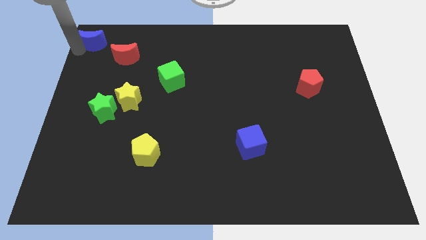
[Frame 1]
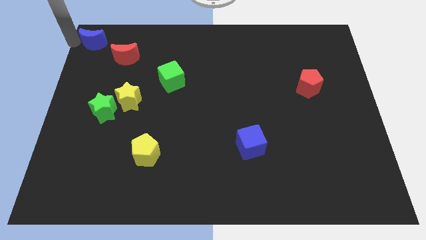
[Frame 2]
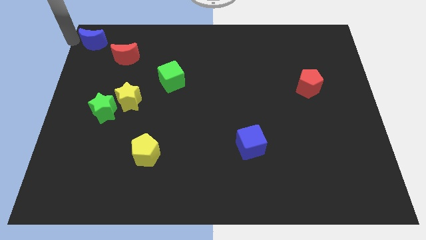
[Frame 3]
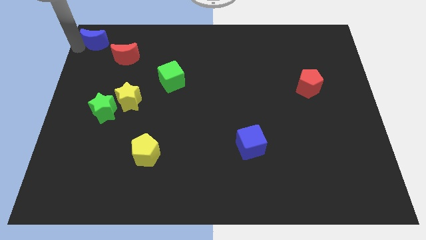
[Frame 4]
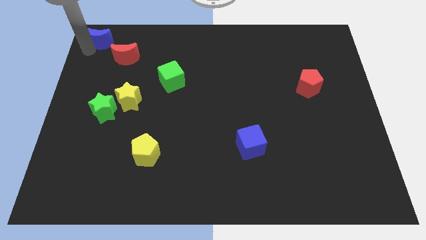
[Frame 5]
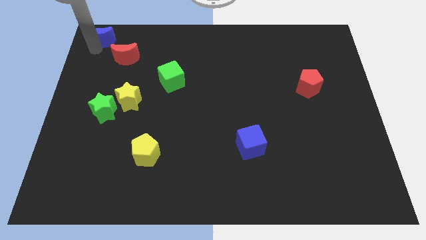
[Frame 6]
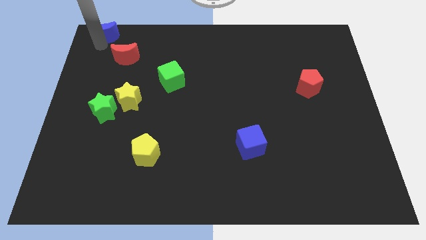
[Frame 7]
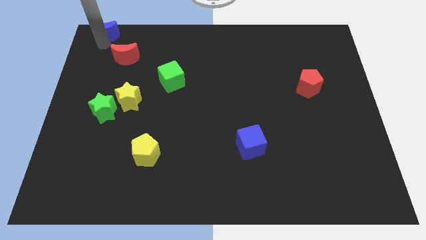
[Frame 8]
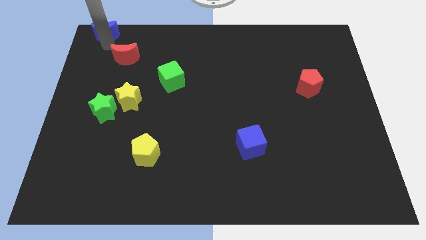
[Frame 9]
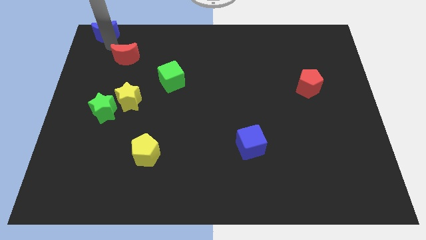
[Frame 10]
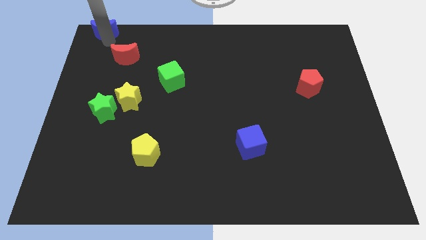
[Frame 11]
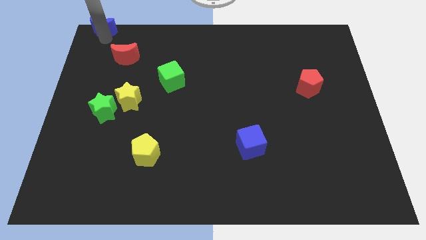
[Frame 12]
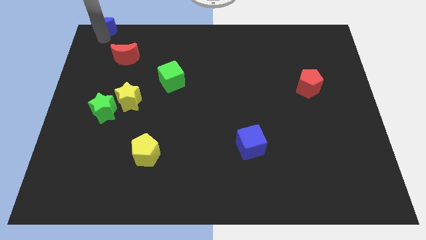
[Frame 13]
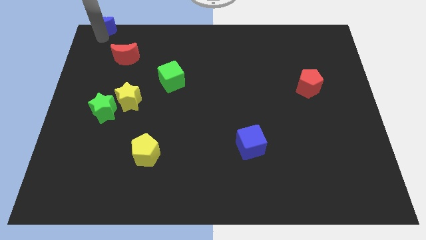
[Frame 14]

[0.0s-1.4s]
place blue moon to the top left of the red moon

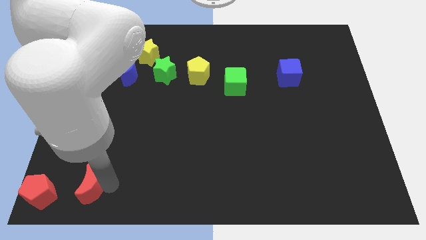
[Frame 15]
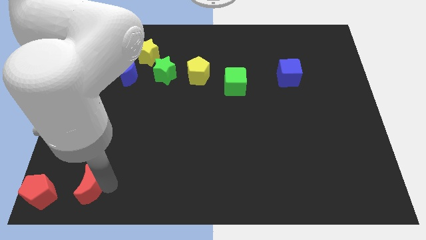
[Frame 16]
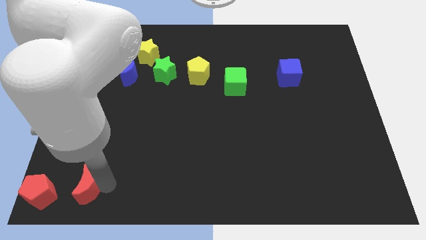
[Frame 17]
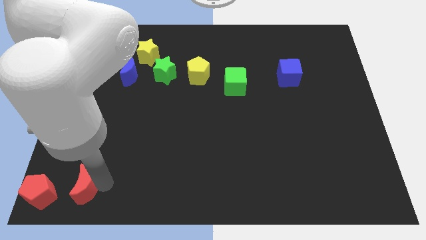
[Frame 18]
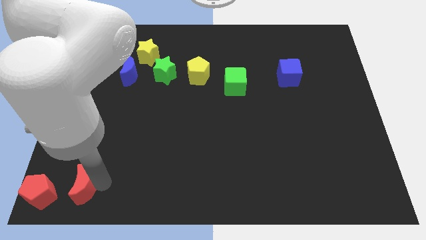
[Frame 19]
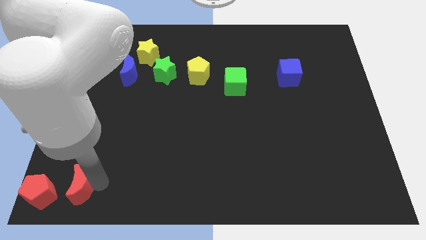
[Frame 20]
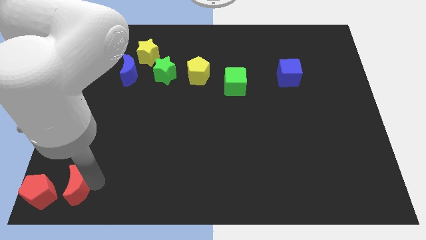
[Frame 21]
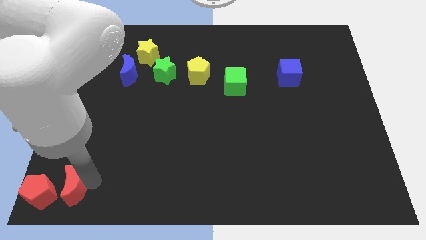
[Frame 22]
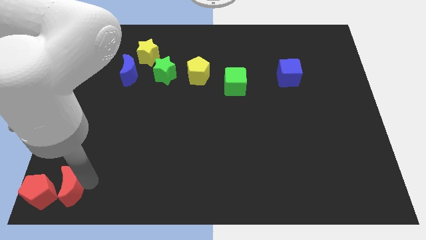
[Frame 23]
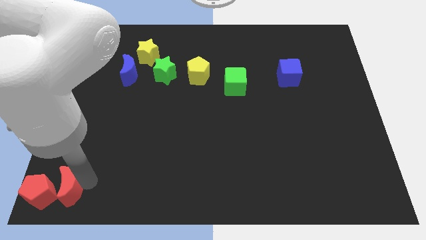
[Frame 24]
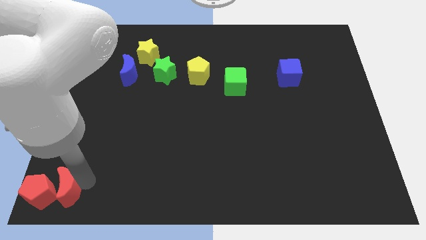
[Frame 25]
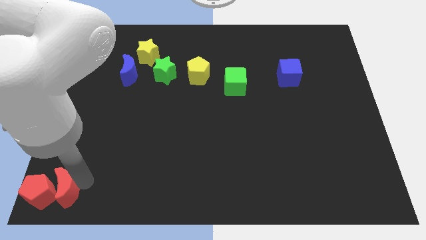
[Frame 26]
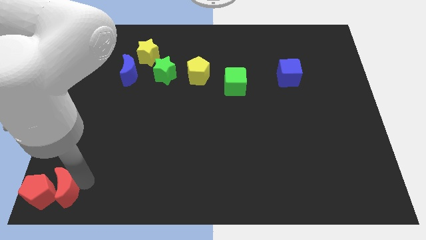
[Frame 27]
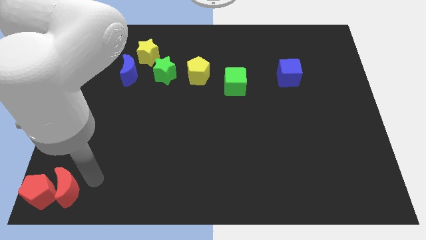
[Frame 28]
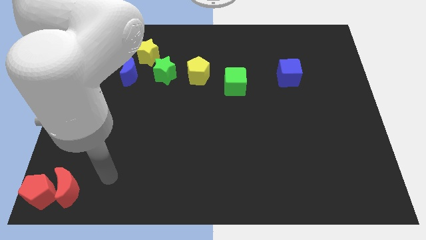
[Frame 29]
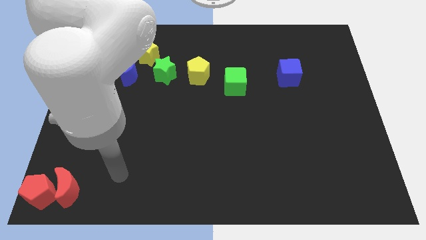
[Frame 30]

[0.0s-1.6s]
slide the red moon close to the red pentagon

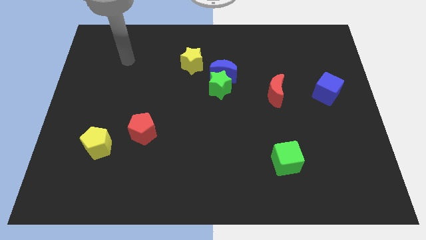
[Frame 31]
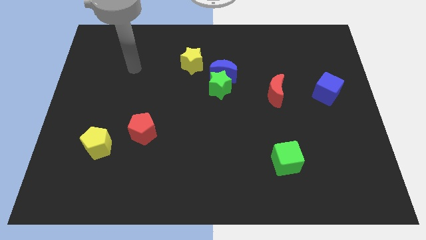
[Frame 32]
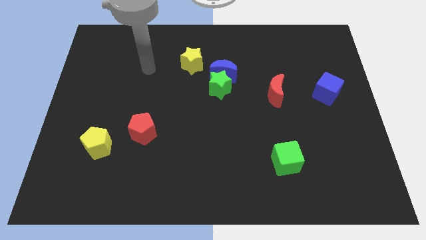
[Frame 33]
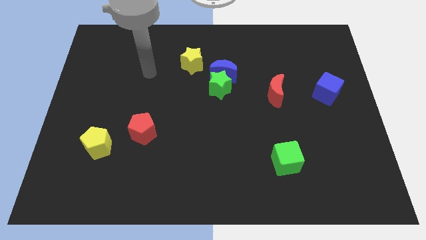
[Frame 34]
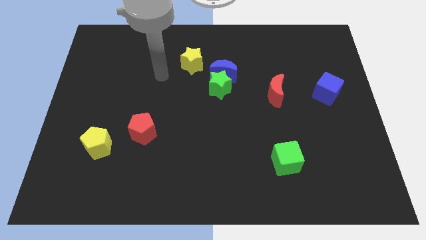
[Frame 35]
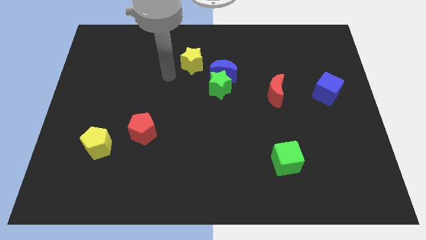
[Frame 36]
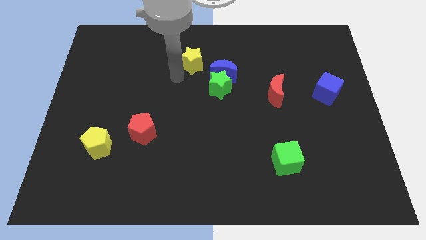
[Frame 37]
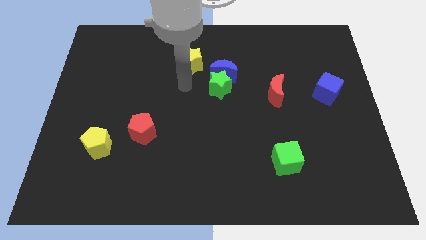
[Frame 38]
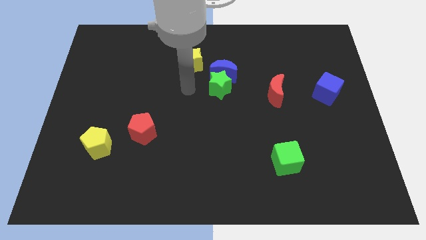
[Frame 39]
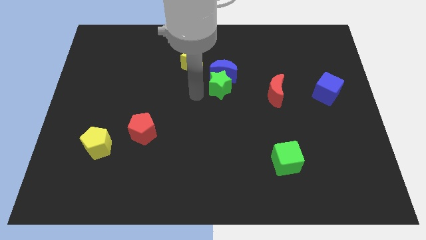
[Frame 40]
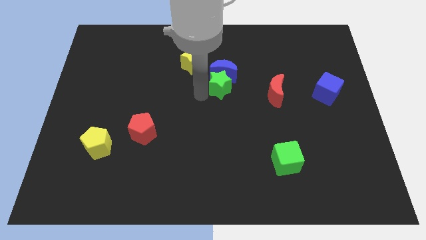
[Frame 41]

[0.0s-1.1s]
place the arm to te left of the green star

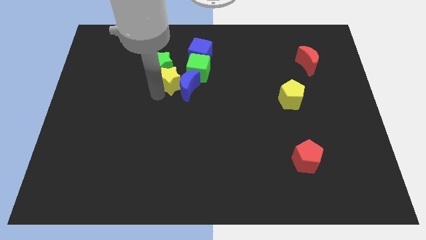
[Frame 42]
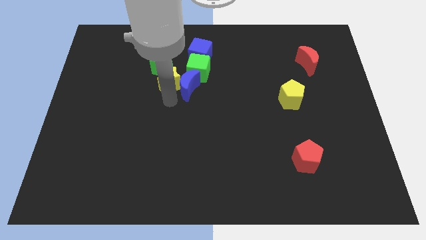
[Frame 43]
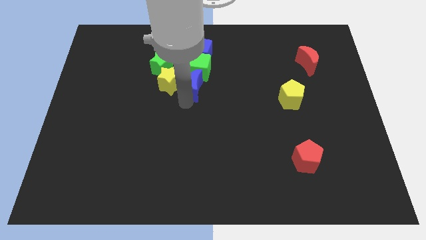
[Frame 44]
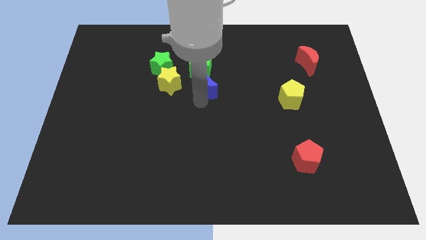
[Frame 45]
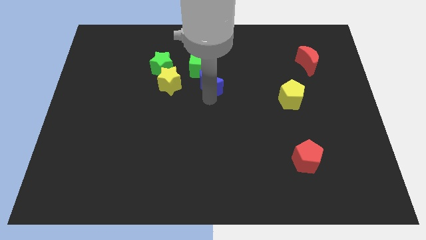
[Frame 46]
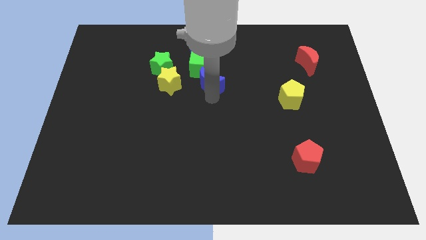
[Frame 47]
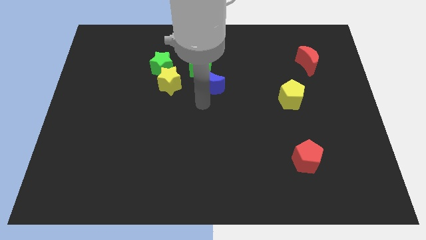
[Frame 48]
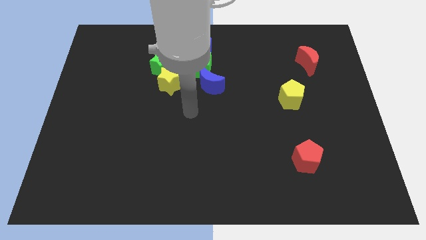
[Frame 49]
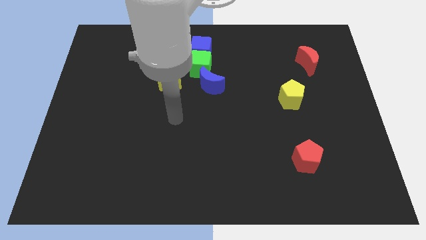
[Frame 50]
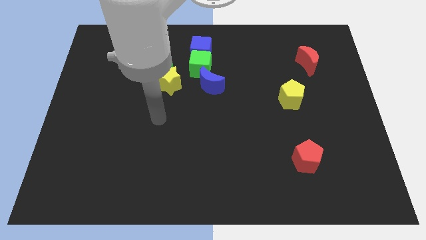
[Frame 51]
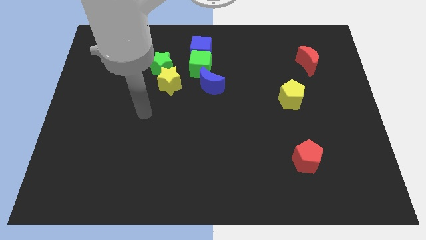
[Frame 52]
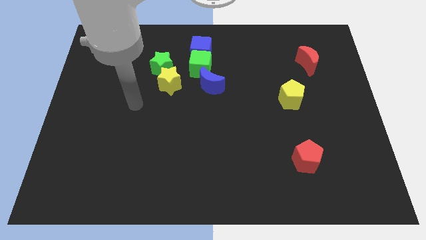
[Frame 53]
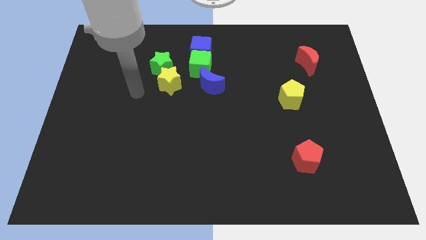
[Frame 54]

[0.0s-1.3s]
separate the blue moon from the yellow star

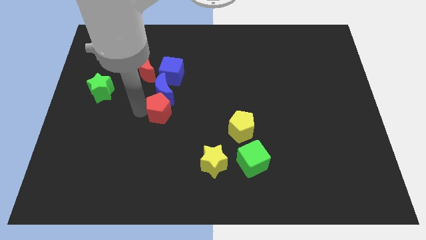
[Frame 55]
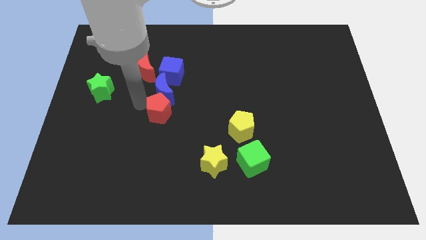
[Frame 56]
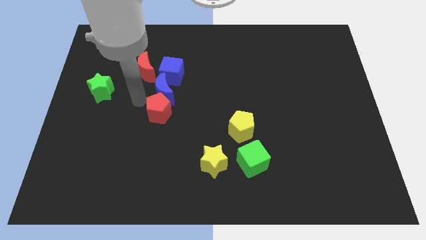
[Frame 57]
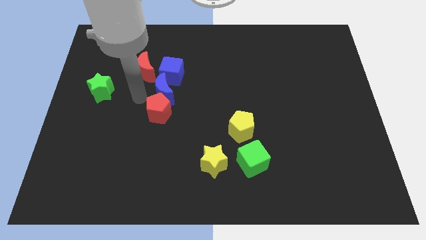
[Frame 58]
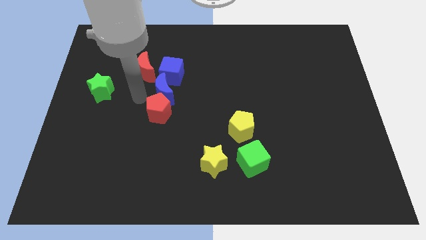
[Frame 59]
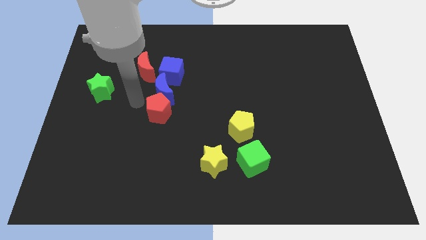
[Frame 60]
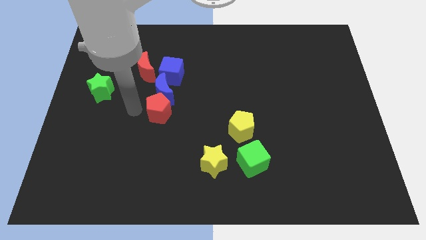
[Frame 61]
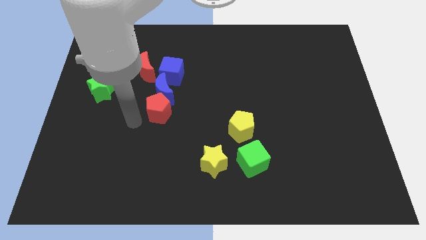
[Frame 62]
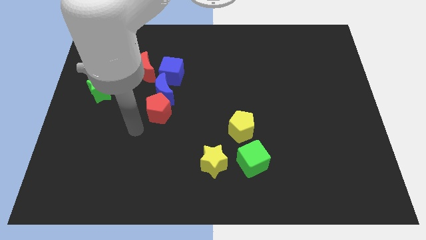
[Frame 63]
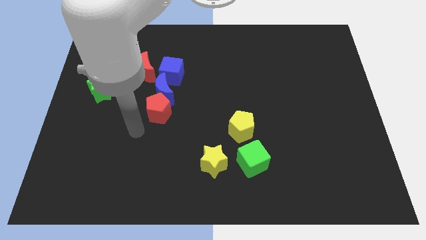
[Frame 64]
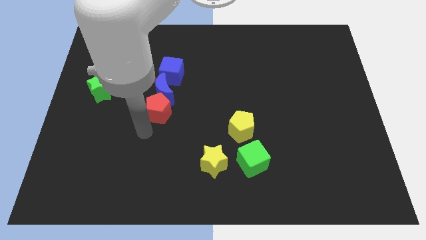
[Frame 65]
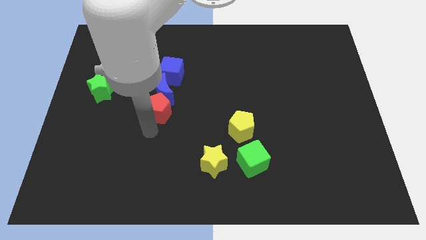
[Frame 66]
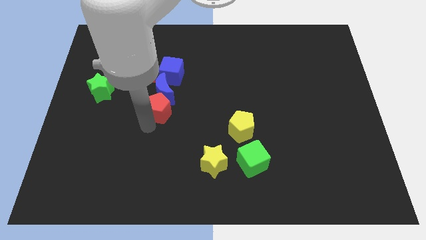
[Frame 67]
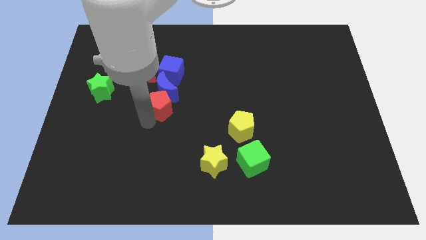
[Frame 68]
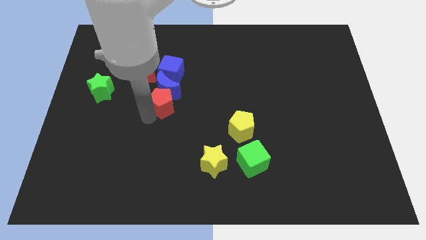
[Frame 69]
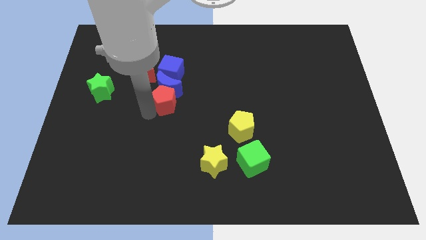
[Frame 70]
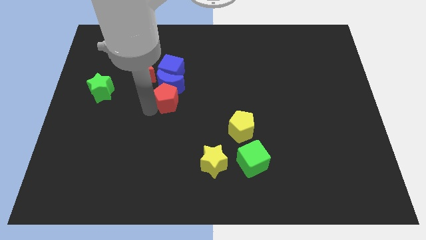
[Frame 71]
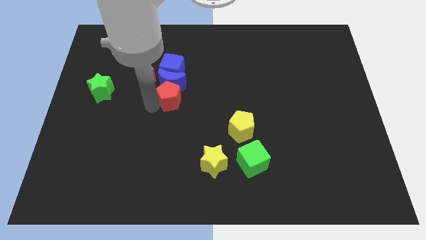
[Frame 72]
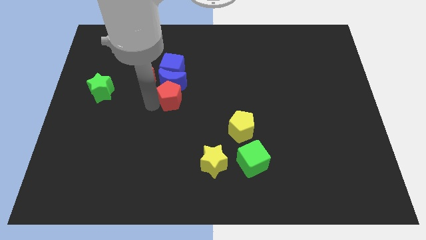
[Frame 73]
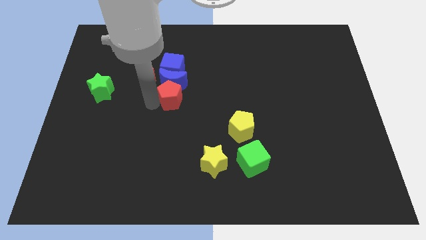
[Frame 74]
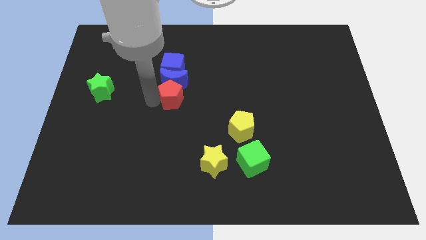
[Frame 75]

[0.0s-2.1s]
move the blue cube and blue crescent towards up with the red pentagon

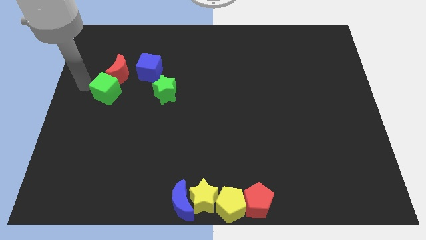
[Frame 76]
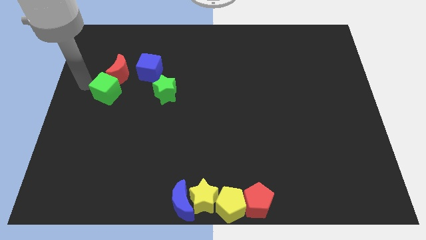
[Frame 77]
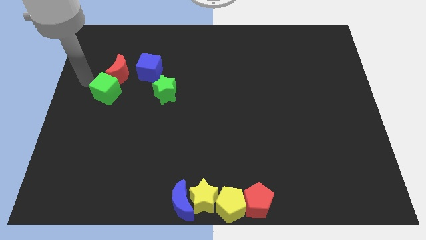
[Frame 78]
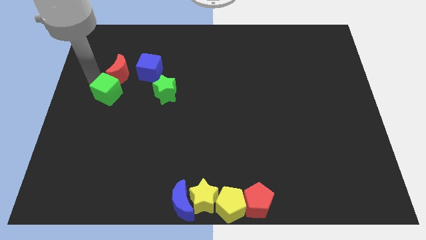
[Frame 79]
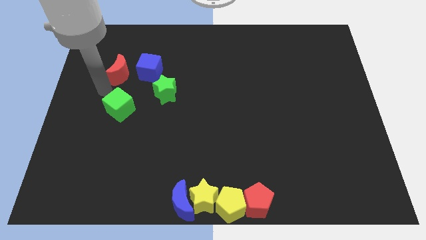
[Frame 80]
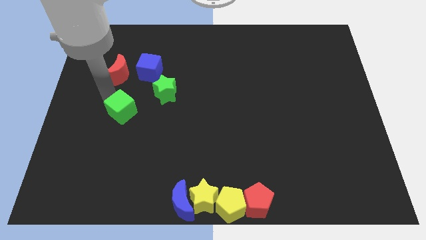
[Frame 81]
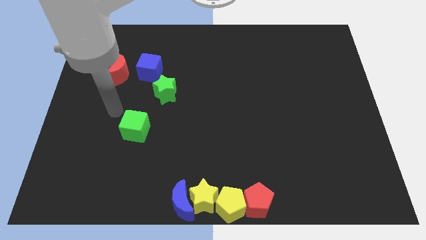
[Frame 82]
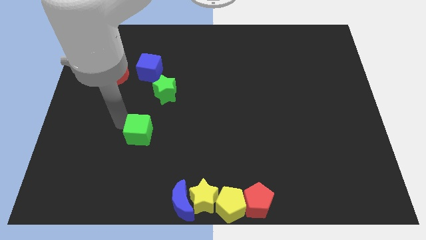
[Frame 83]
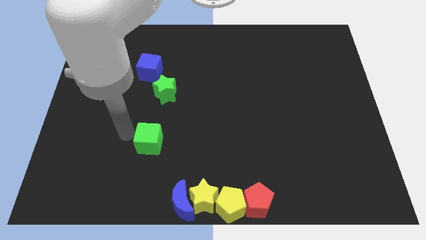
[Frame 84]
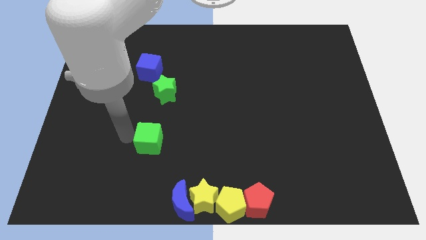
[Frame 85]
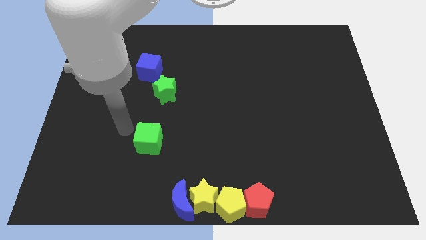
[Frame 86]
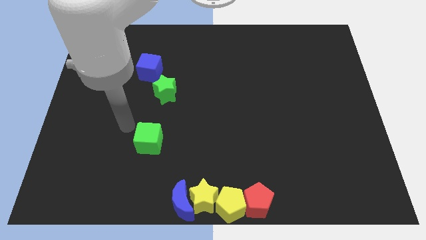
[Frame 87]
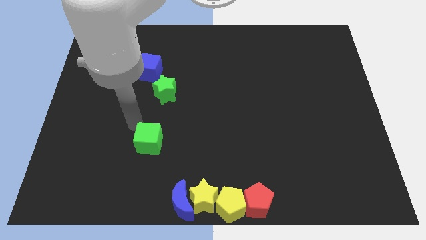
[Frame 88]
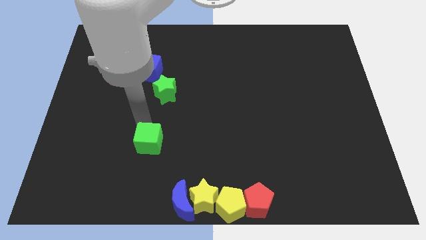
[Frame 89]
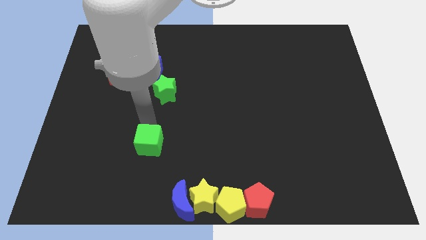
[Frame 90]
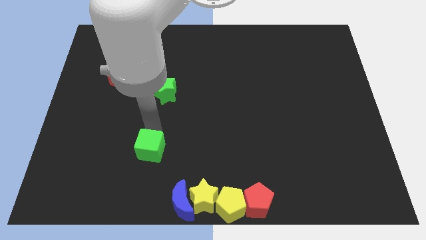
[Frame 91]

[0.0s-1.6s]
separate green cube from the red crescent
